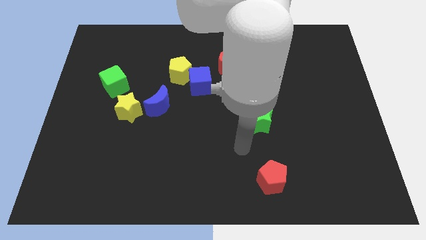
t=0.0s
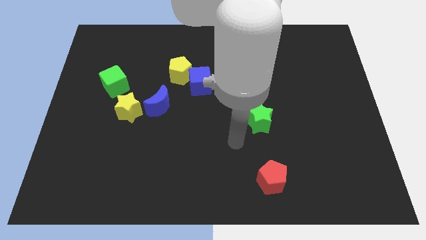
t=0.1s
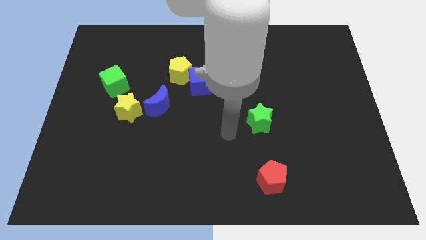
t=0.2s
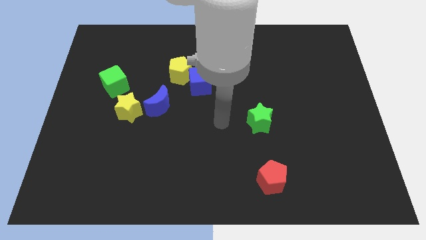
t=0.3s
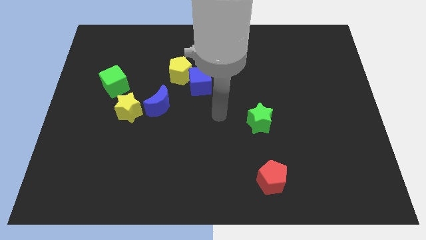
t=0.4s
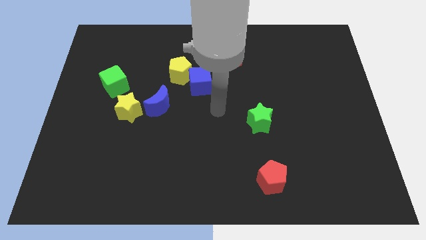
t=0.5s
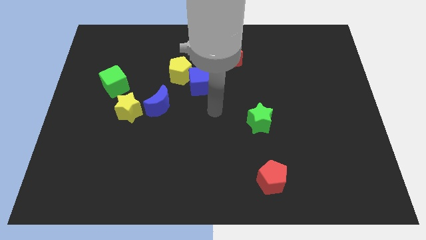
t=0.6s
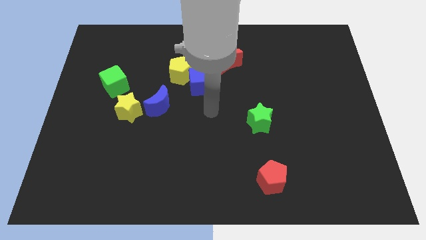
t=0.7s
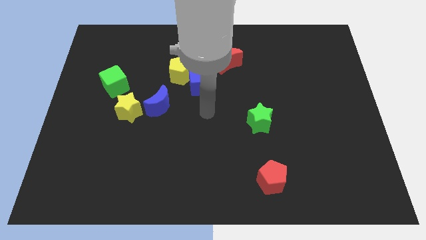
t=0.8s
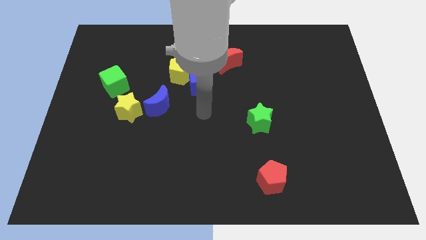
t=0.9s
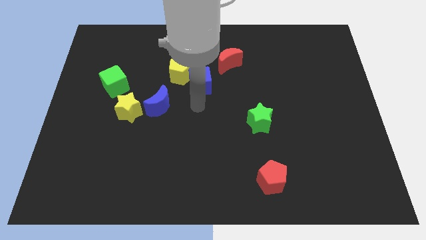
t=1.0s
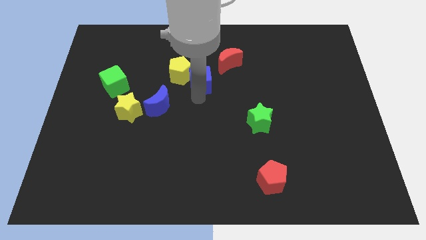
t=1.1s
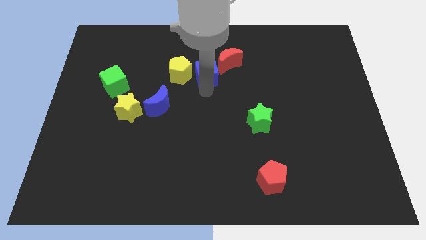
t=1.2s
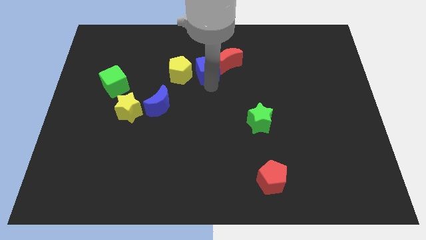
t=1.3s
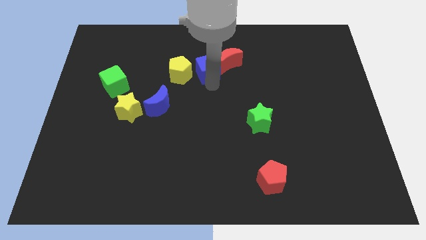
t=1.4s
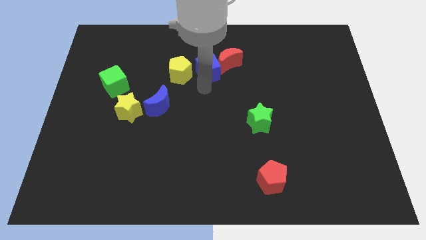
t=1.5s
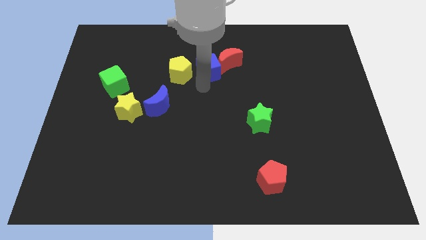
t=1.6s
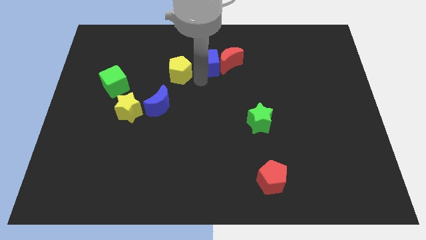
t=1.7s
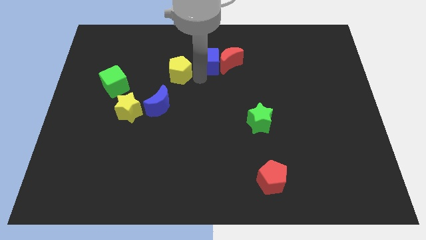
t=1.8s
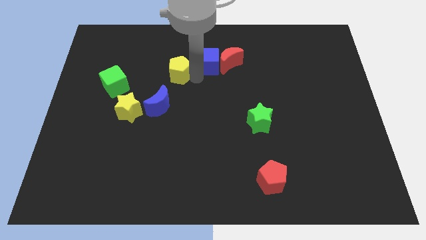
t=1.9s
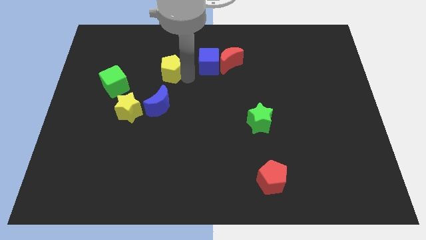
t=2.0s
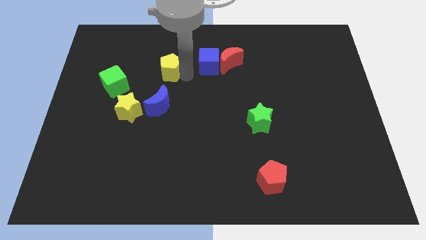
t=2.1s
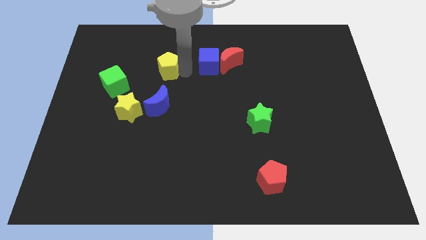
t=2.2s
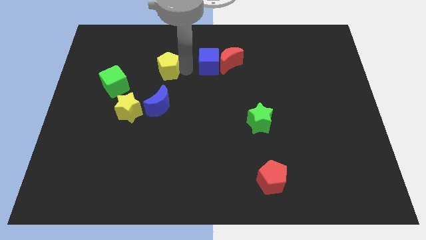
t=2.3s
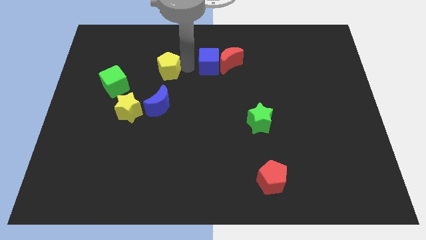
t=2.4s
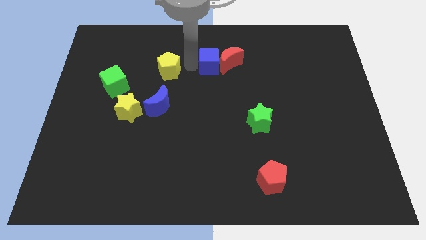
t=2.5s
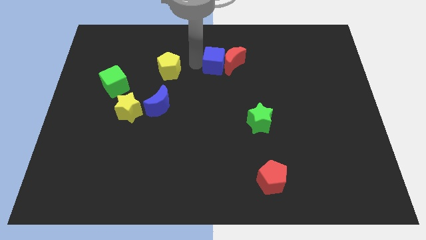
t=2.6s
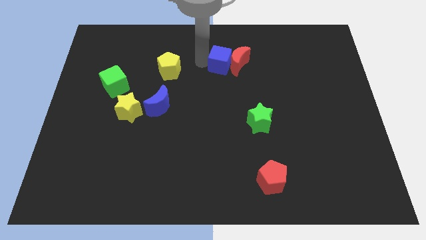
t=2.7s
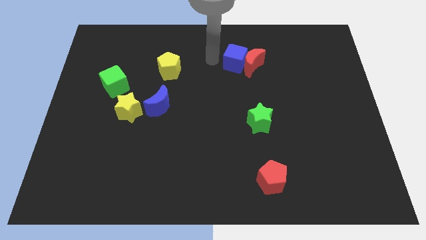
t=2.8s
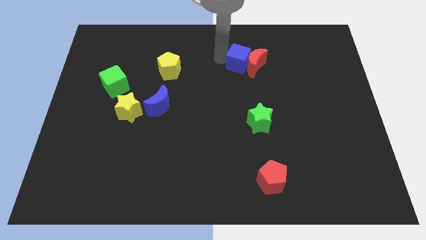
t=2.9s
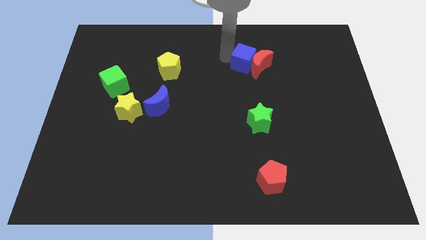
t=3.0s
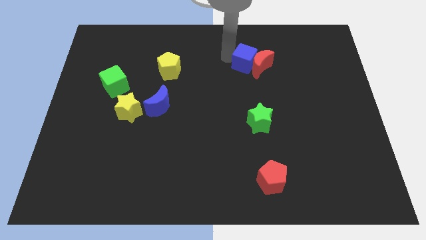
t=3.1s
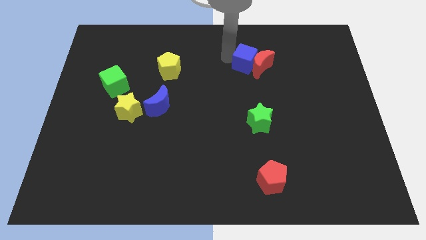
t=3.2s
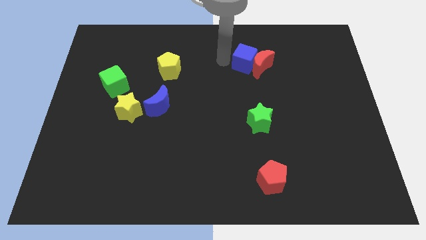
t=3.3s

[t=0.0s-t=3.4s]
place the blue cube in between the yellow pentagon and red moon

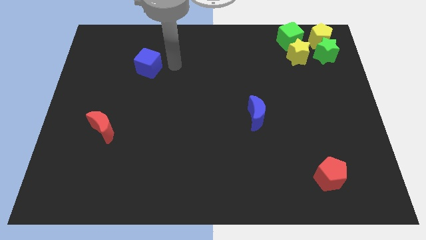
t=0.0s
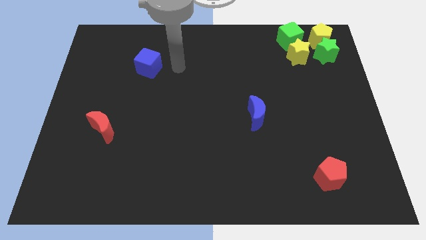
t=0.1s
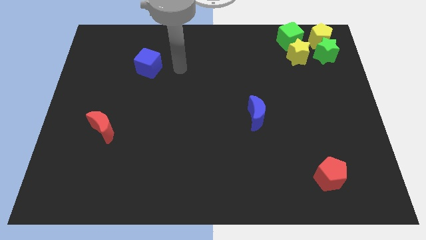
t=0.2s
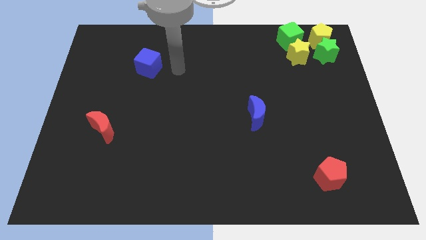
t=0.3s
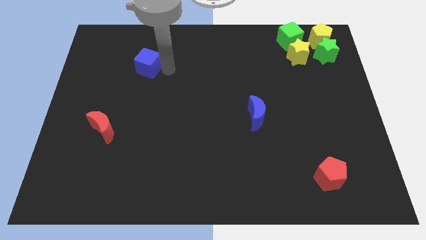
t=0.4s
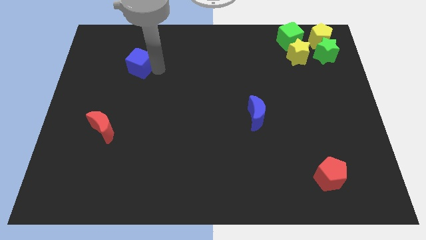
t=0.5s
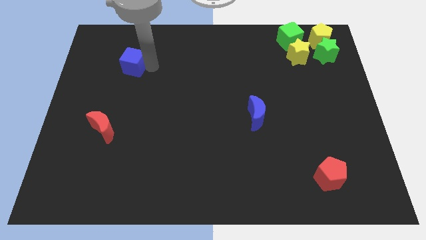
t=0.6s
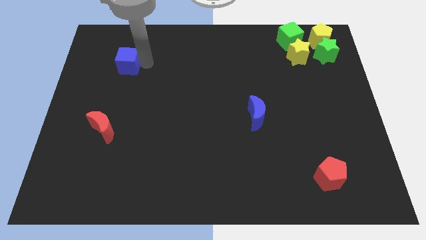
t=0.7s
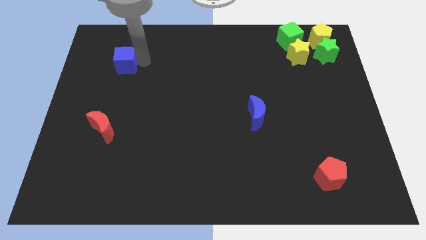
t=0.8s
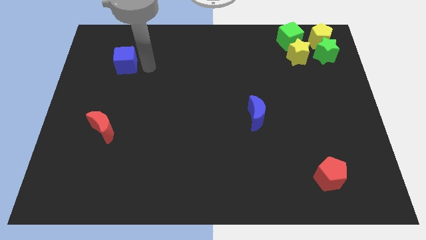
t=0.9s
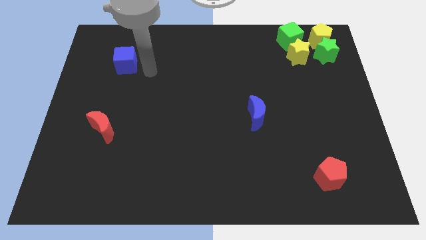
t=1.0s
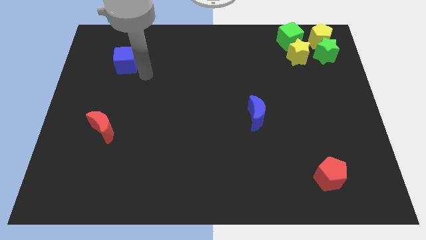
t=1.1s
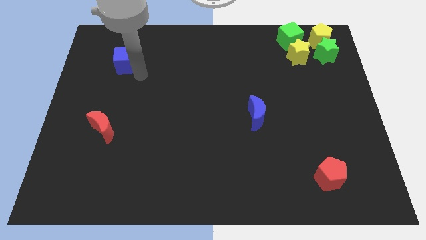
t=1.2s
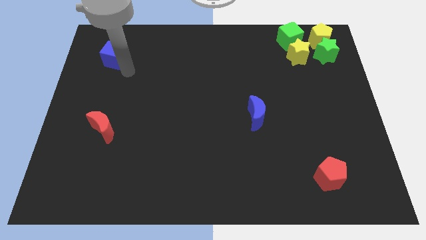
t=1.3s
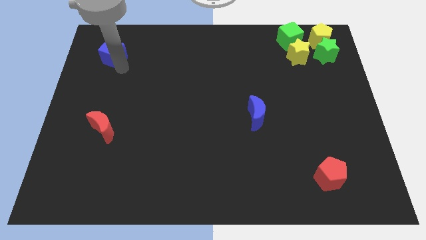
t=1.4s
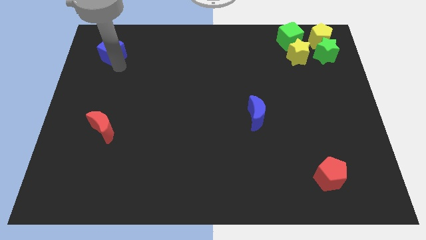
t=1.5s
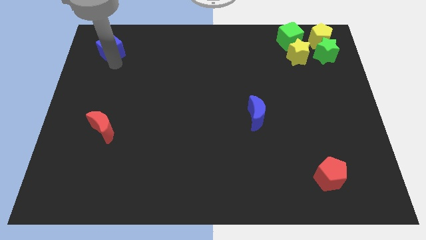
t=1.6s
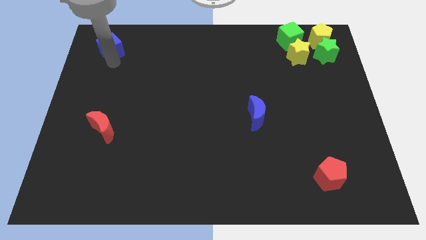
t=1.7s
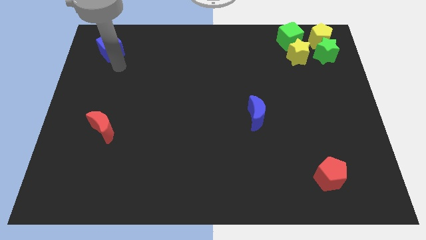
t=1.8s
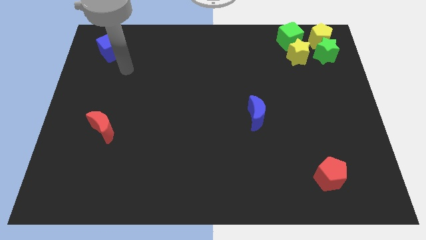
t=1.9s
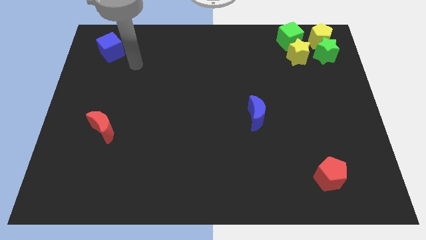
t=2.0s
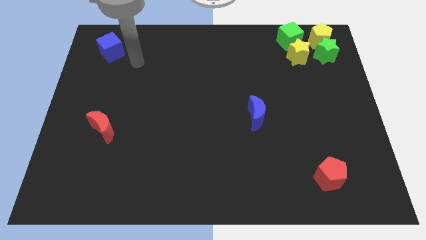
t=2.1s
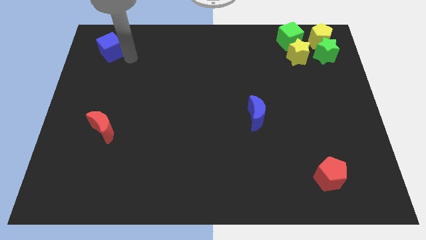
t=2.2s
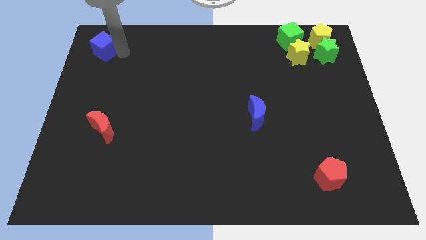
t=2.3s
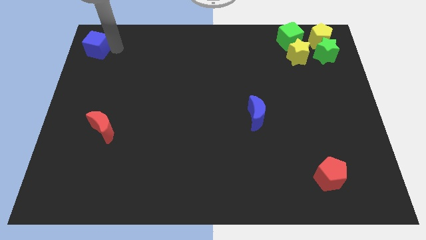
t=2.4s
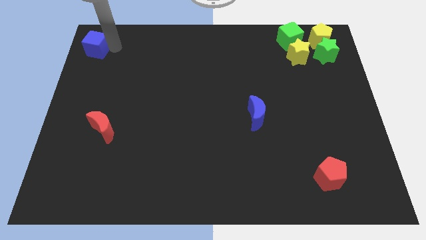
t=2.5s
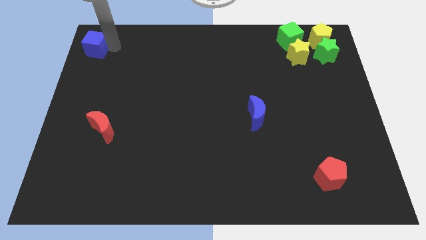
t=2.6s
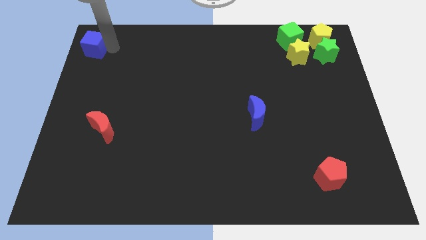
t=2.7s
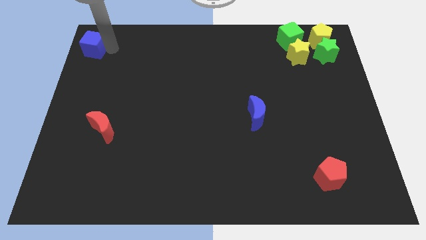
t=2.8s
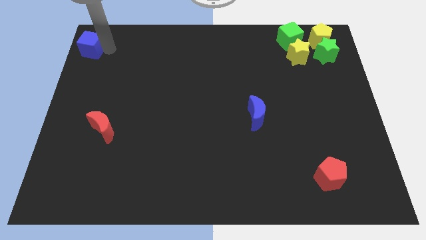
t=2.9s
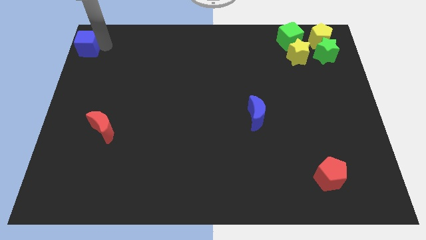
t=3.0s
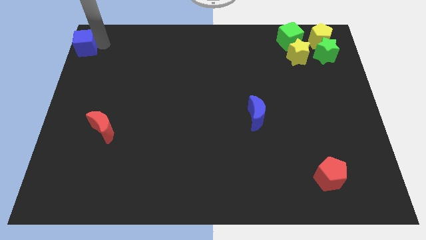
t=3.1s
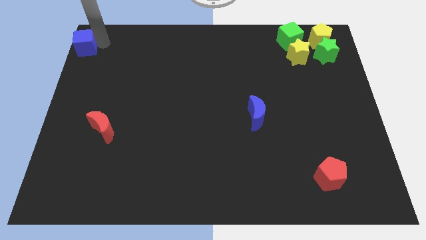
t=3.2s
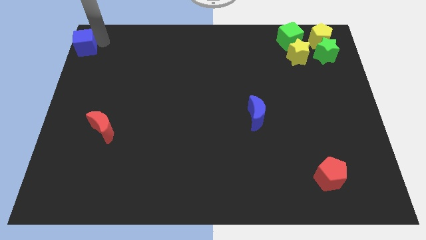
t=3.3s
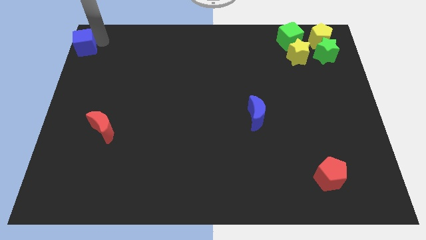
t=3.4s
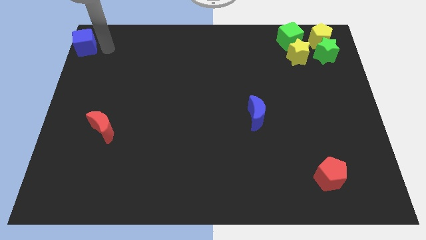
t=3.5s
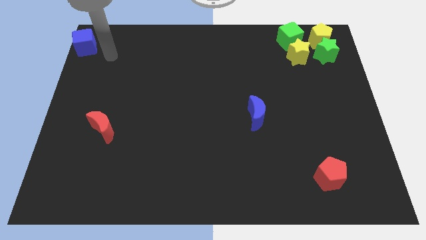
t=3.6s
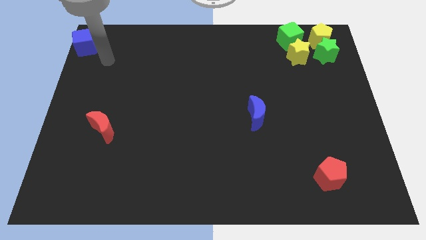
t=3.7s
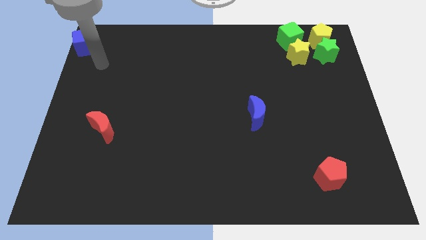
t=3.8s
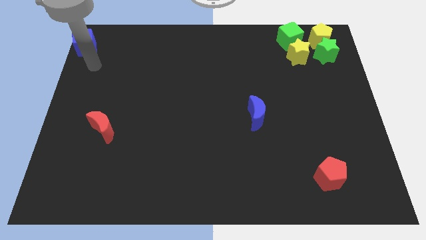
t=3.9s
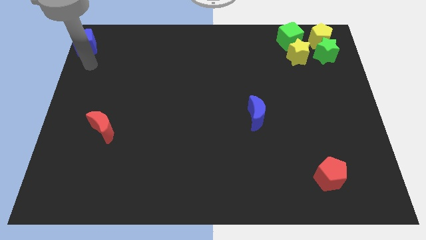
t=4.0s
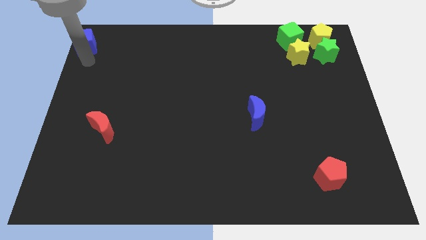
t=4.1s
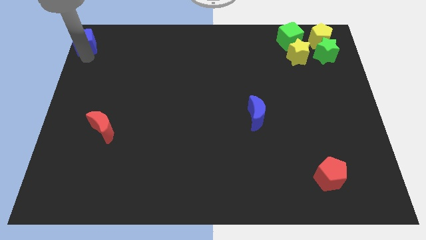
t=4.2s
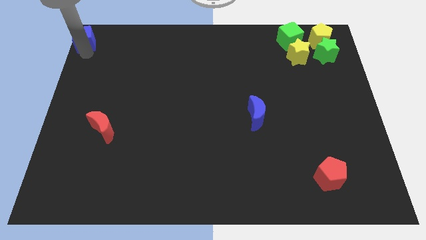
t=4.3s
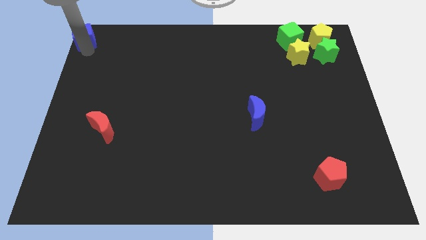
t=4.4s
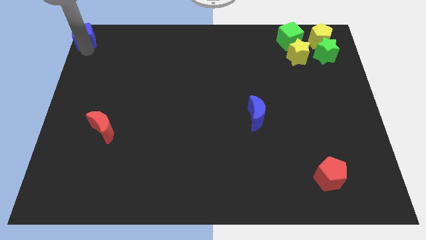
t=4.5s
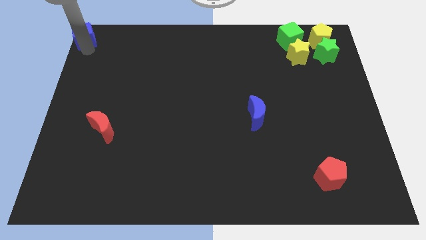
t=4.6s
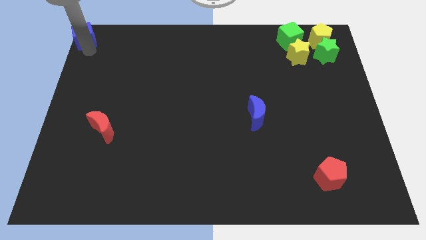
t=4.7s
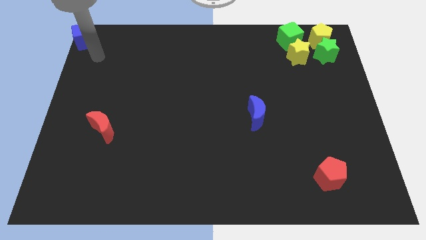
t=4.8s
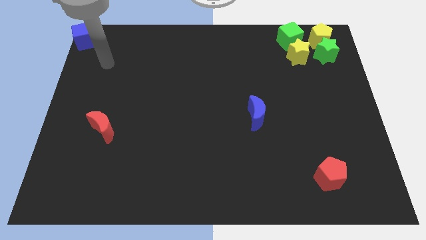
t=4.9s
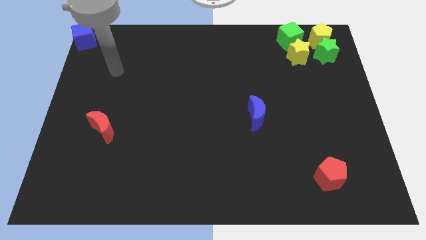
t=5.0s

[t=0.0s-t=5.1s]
push the blue cube to the left top of the board

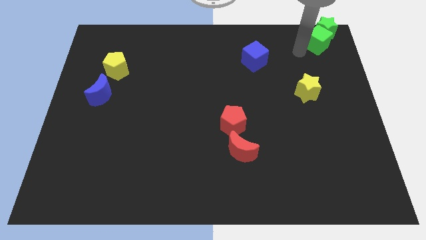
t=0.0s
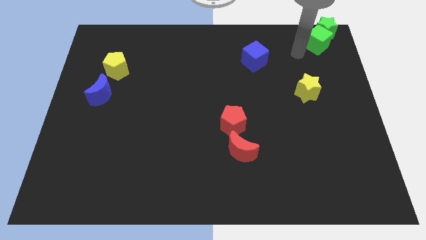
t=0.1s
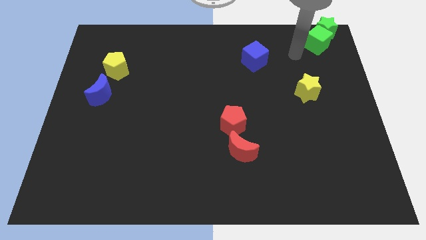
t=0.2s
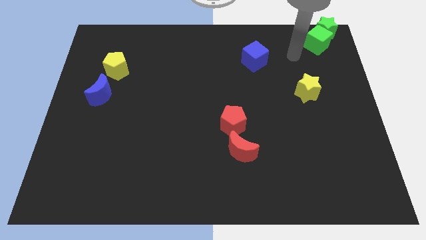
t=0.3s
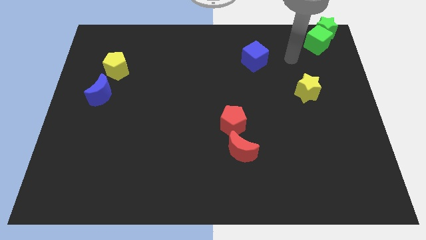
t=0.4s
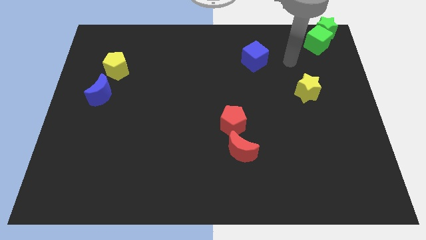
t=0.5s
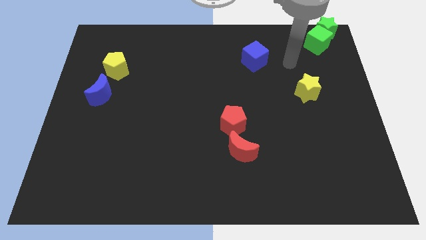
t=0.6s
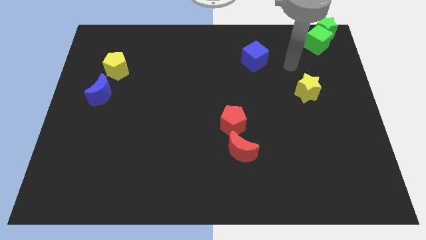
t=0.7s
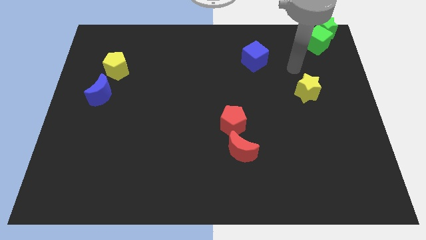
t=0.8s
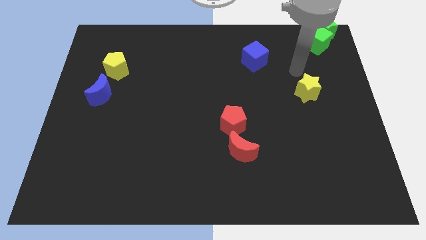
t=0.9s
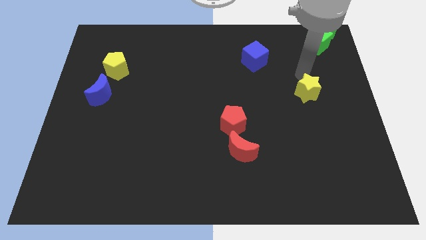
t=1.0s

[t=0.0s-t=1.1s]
point your arm at the top of the yellow star
